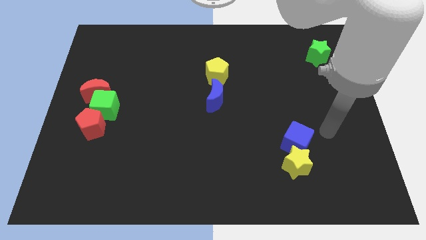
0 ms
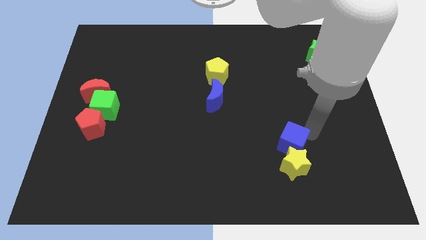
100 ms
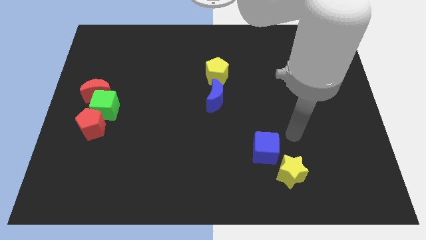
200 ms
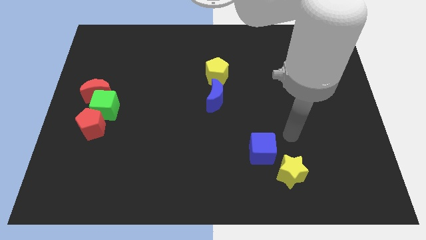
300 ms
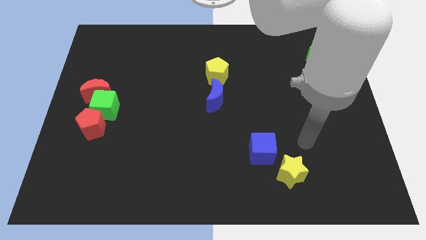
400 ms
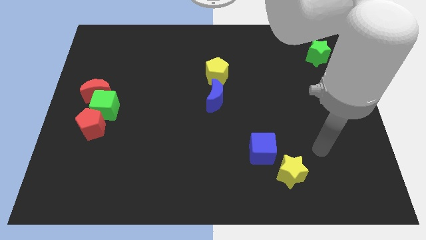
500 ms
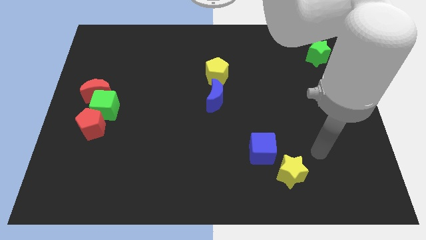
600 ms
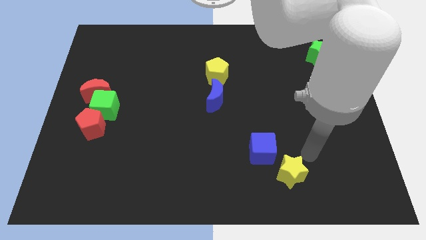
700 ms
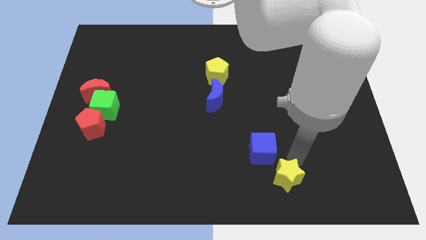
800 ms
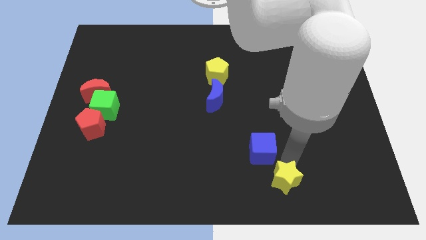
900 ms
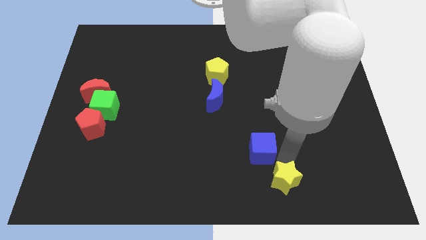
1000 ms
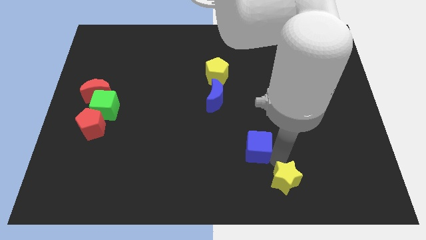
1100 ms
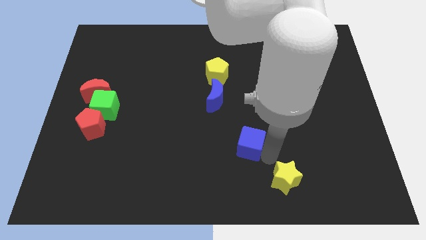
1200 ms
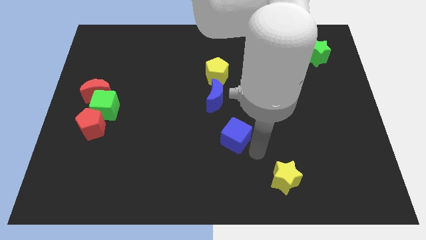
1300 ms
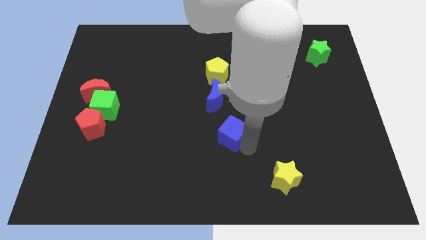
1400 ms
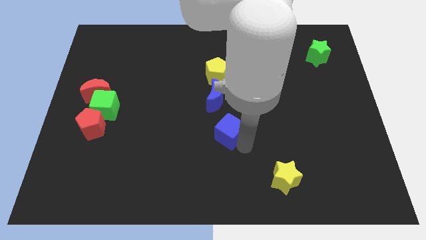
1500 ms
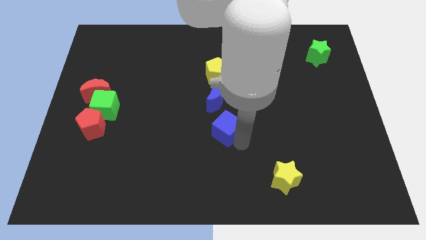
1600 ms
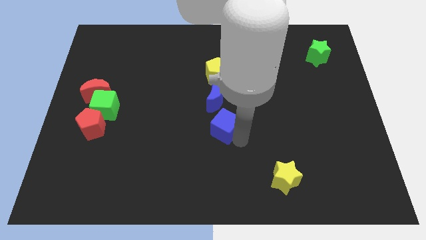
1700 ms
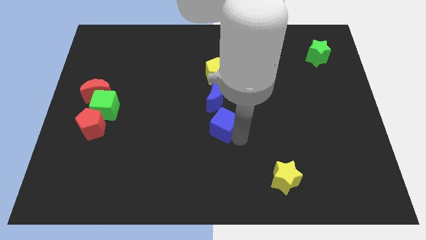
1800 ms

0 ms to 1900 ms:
push the blue cube to the bottom of the blue crescent

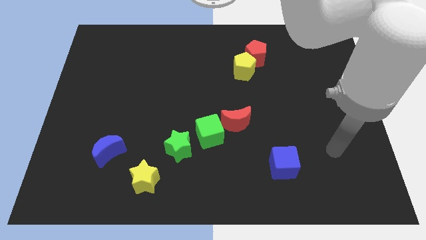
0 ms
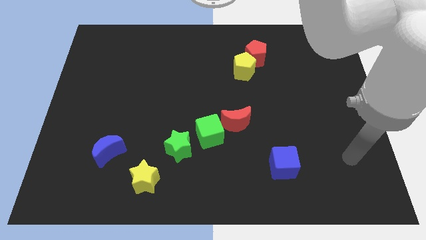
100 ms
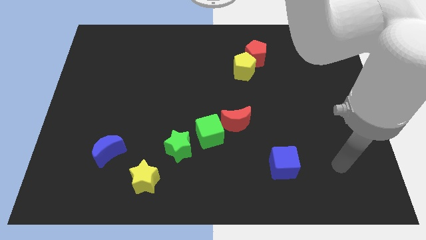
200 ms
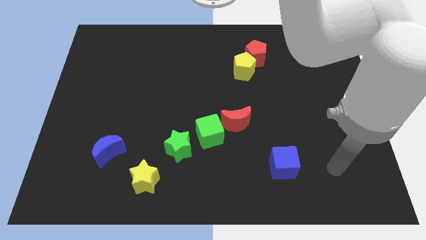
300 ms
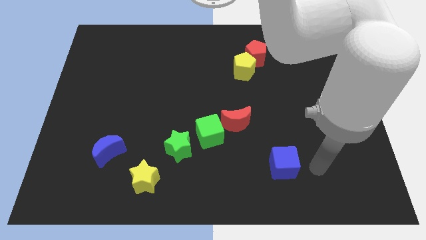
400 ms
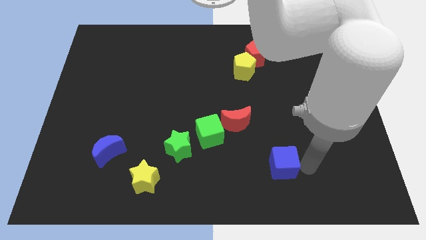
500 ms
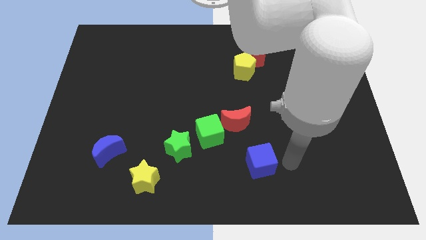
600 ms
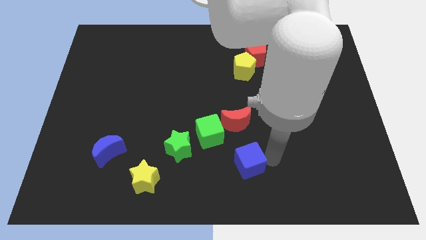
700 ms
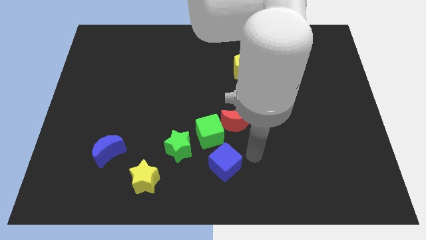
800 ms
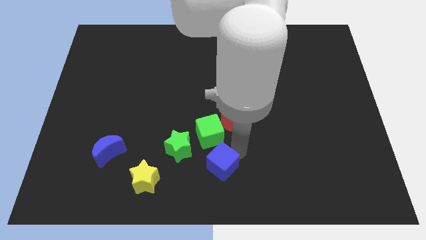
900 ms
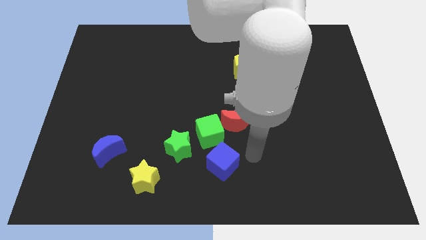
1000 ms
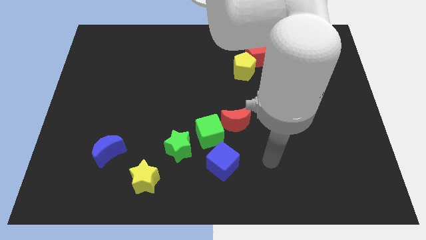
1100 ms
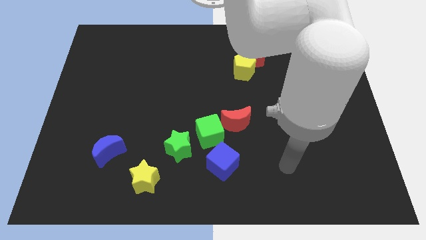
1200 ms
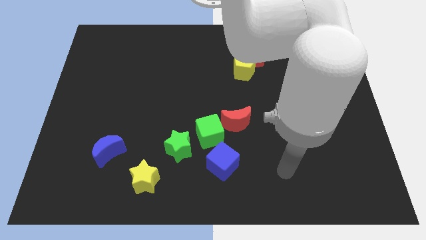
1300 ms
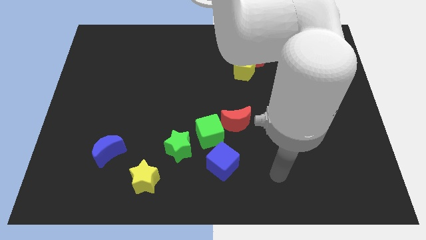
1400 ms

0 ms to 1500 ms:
most the blue cube towards the green star

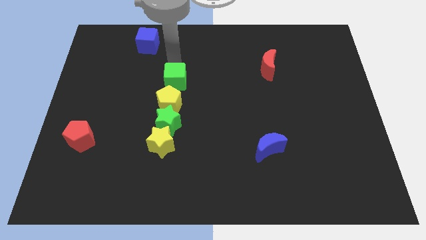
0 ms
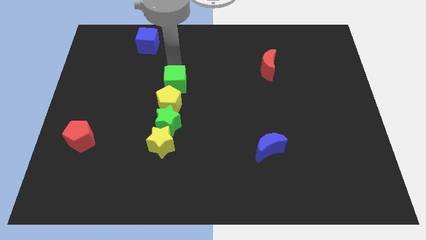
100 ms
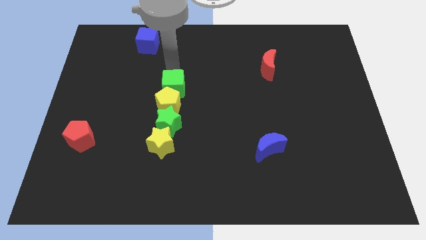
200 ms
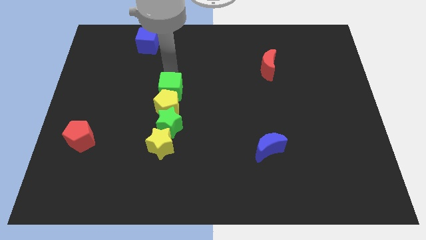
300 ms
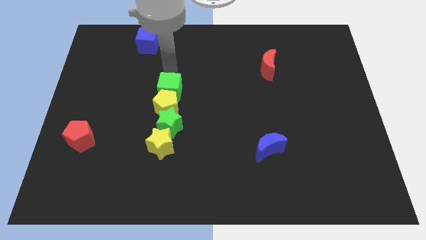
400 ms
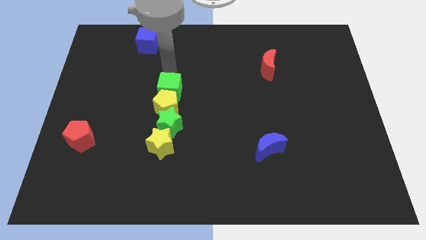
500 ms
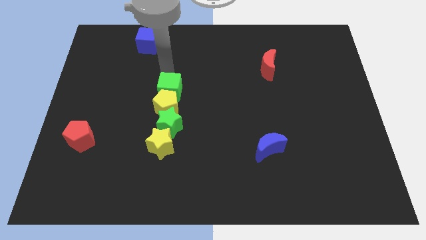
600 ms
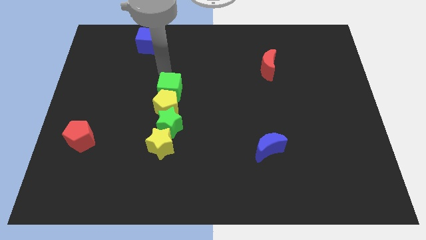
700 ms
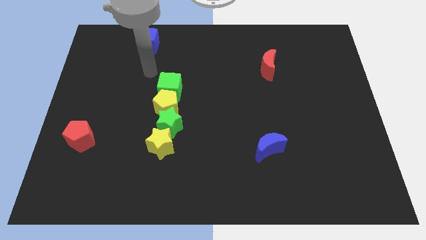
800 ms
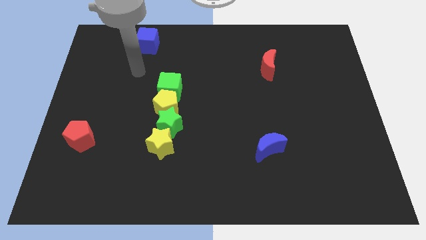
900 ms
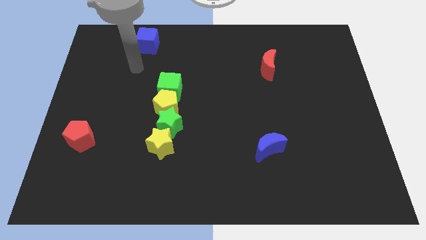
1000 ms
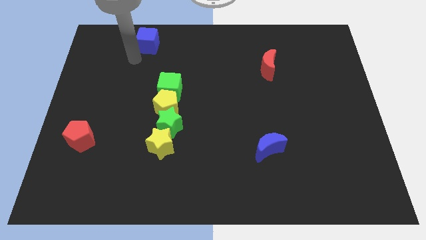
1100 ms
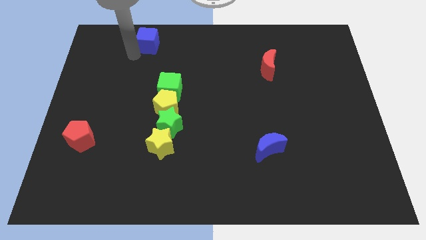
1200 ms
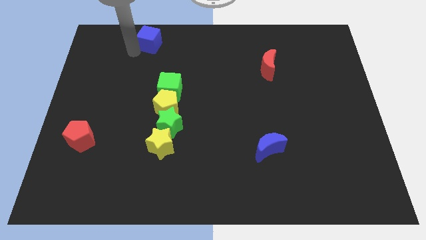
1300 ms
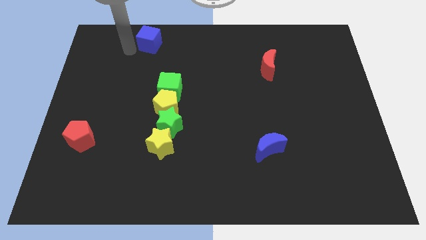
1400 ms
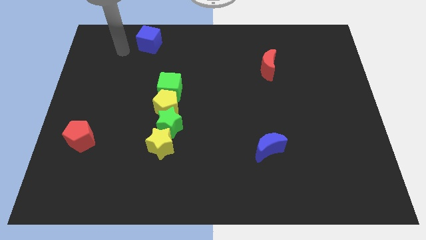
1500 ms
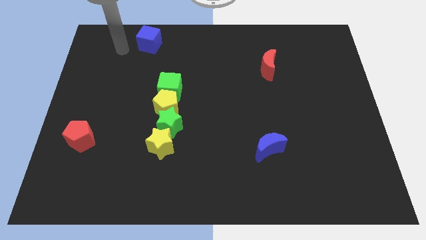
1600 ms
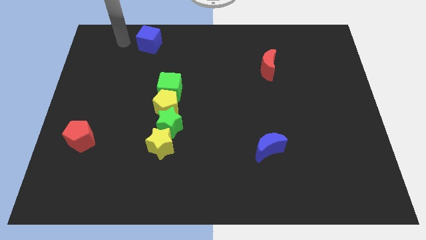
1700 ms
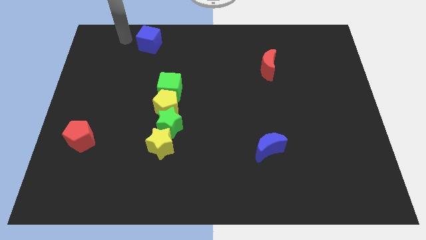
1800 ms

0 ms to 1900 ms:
move the arm left to the blue cube

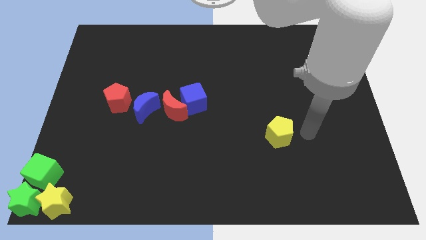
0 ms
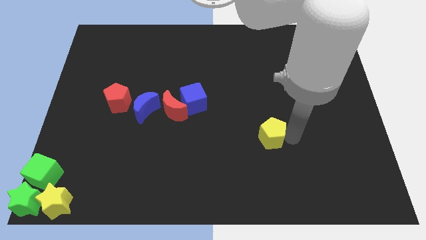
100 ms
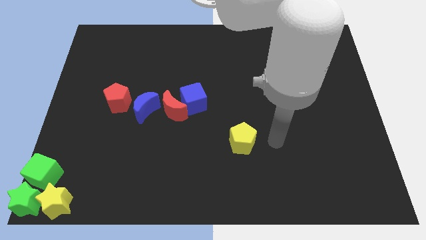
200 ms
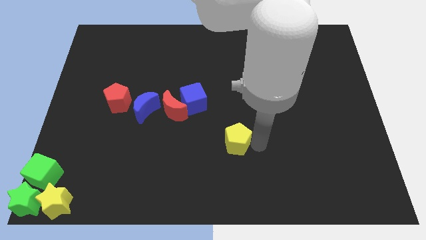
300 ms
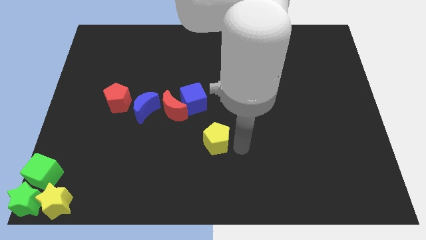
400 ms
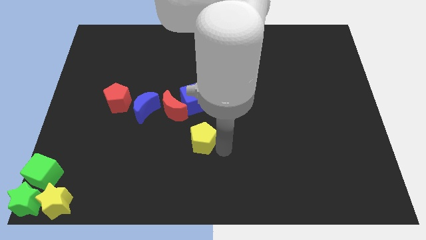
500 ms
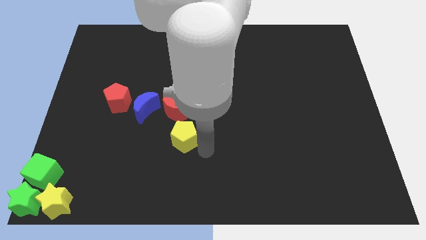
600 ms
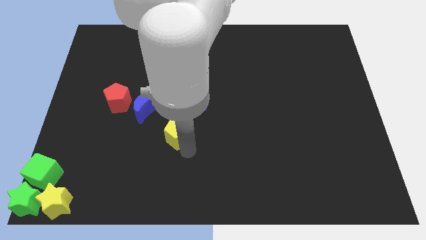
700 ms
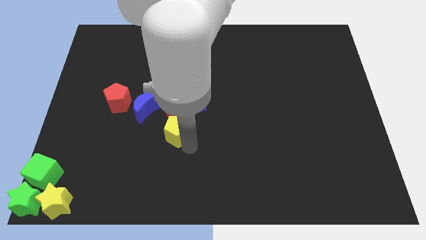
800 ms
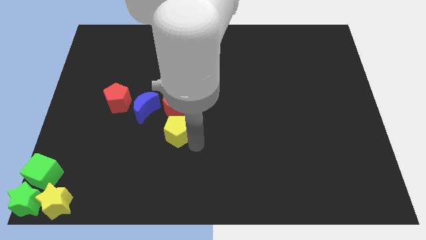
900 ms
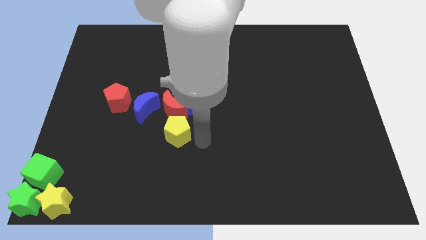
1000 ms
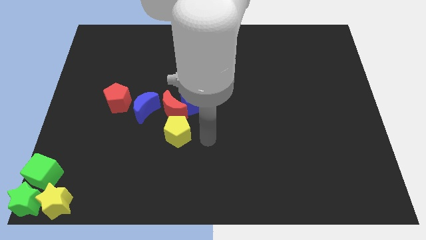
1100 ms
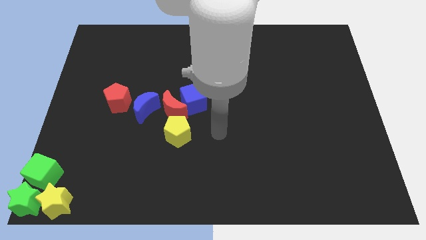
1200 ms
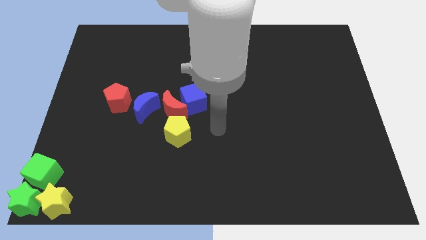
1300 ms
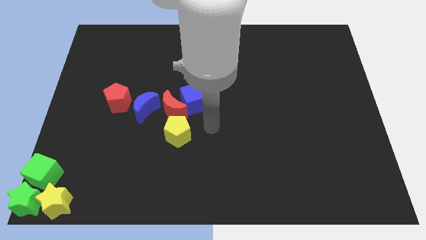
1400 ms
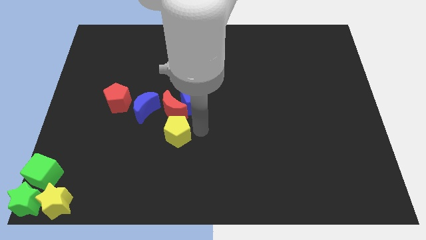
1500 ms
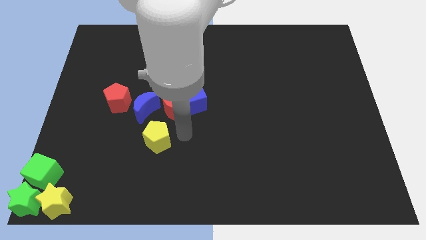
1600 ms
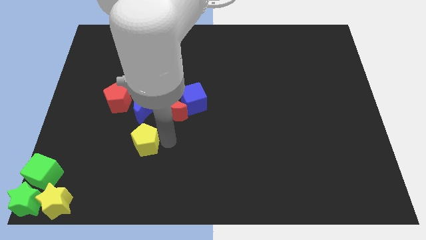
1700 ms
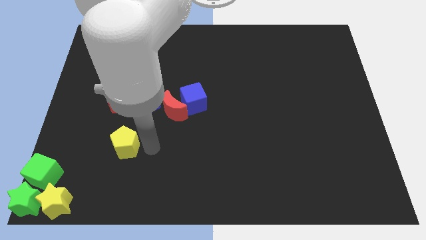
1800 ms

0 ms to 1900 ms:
slide the yellow pentagon at the bottom of the blue crescent

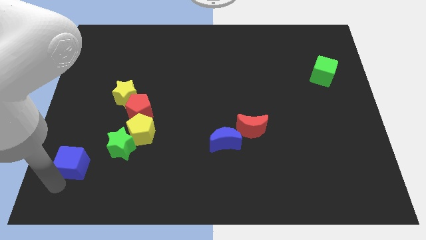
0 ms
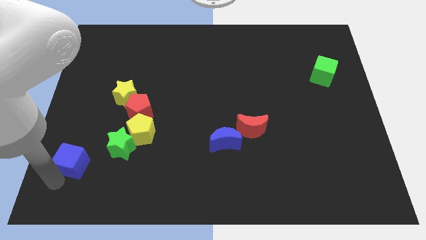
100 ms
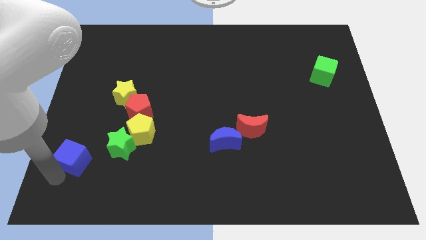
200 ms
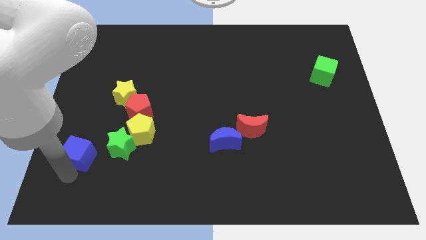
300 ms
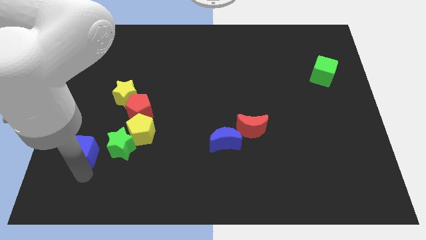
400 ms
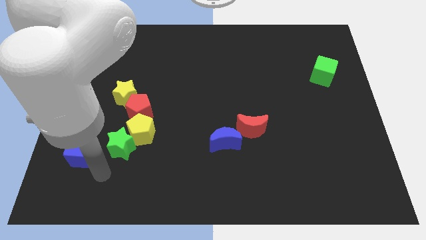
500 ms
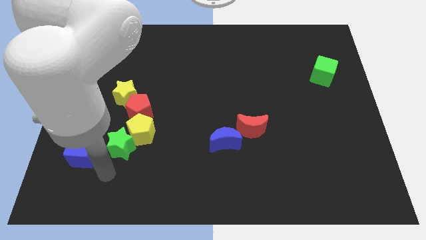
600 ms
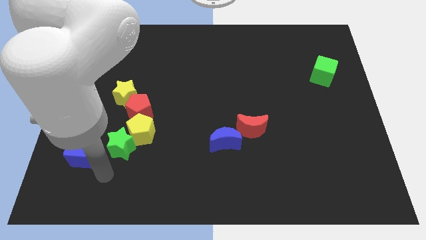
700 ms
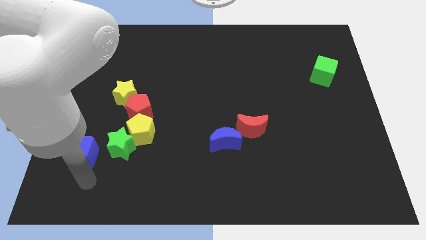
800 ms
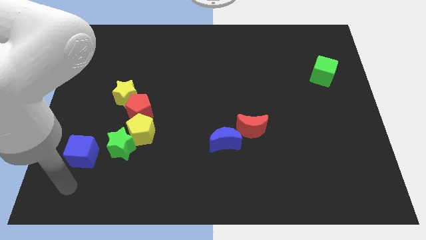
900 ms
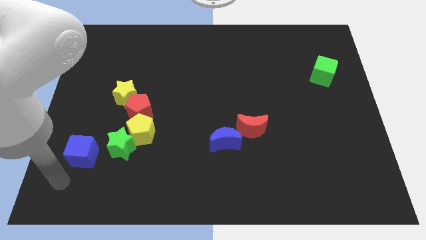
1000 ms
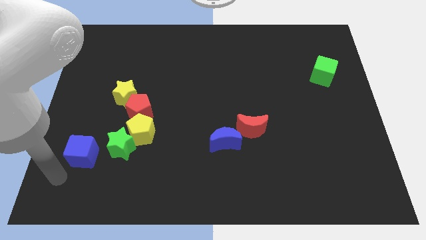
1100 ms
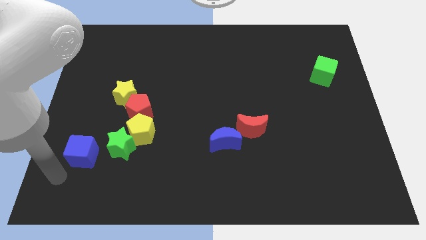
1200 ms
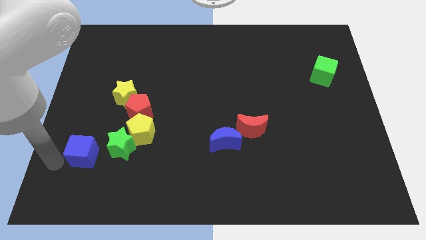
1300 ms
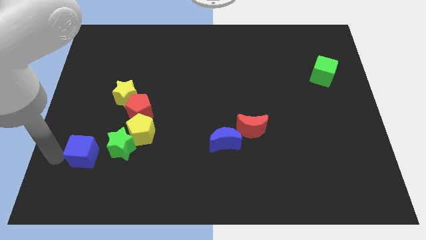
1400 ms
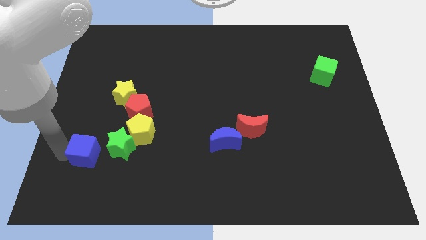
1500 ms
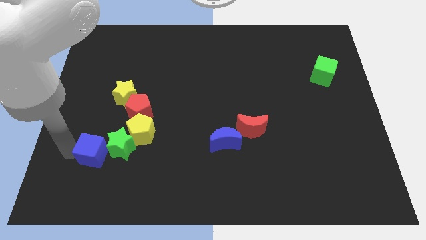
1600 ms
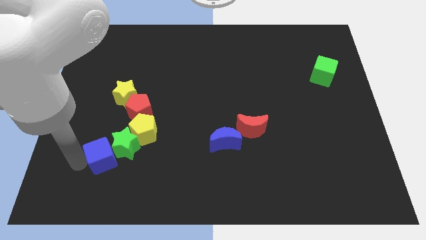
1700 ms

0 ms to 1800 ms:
push the blue cube into the green star
